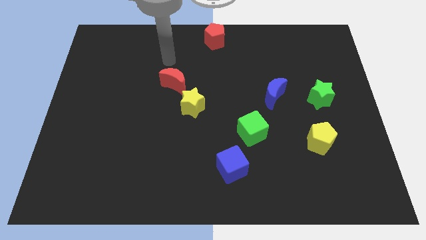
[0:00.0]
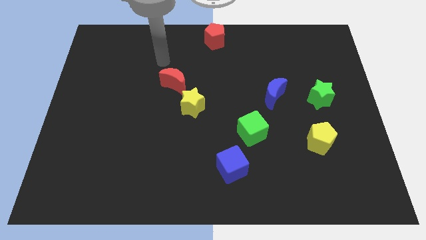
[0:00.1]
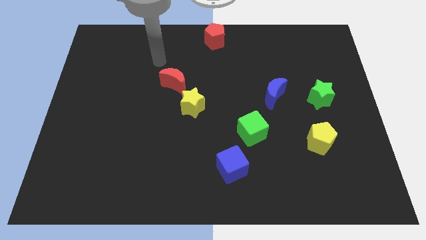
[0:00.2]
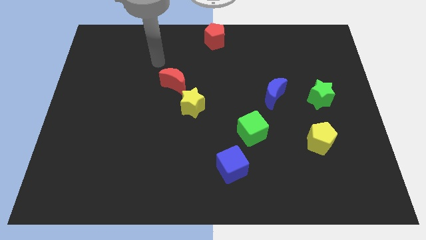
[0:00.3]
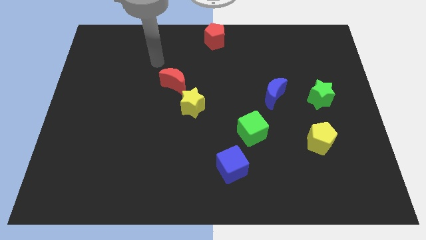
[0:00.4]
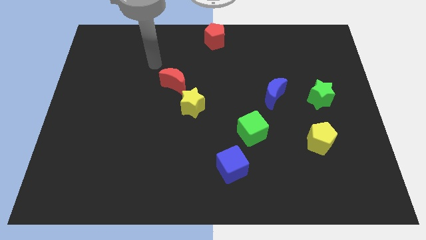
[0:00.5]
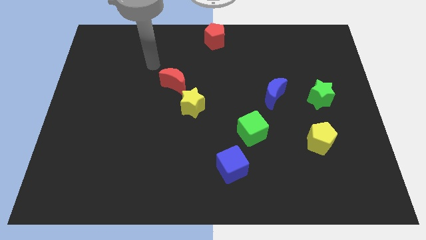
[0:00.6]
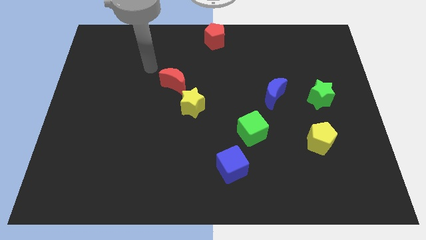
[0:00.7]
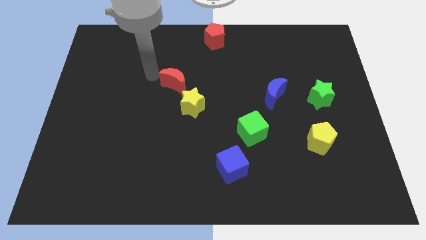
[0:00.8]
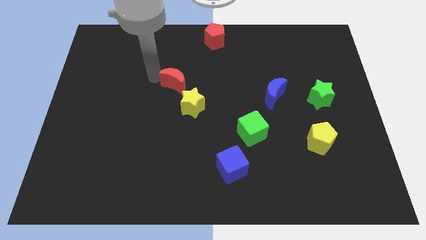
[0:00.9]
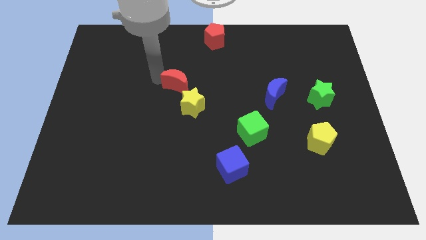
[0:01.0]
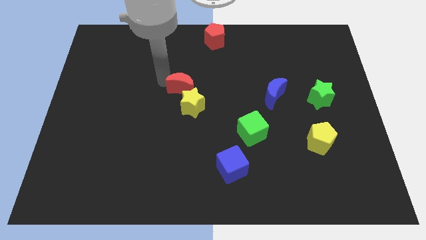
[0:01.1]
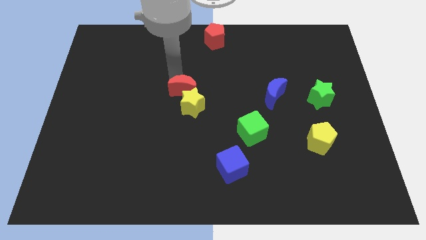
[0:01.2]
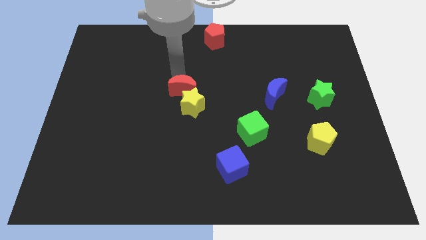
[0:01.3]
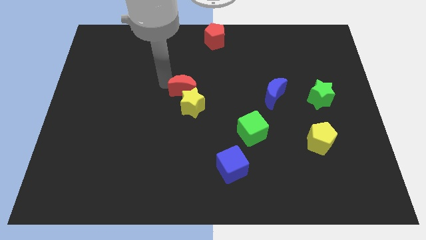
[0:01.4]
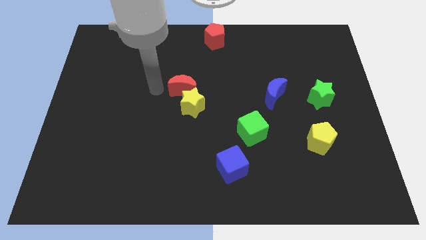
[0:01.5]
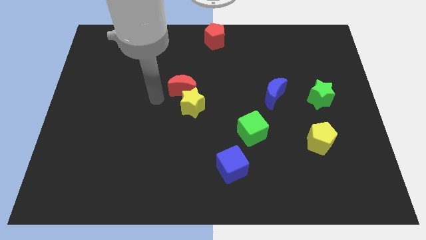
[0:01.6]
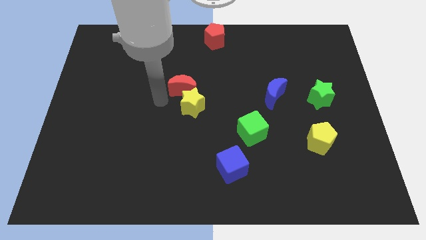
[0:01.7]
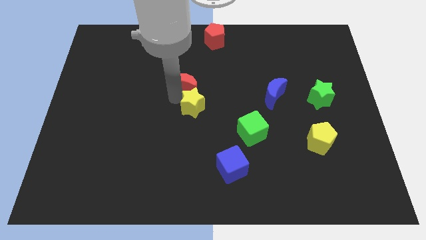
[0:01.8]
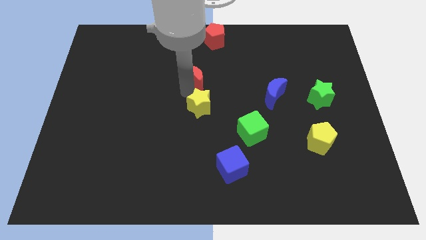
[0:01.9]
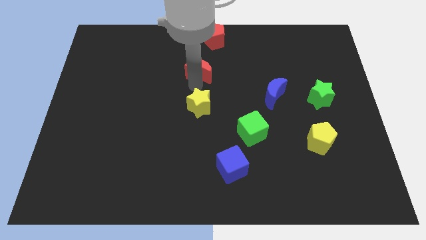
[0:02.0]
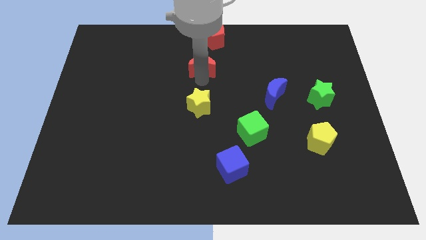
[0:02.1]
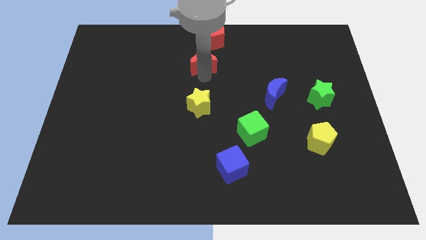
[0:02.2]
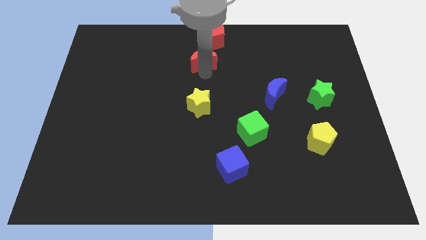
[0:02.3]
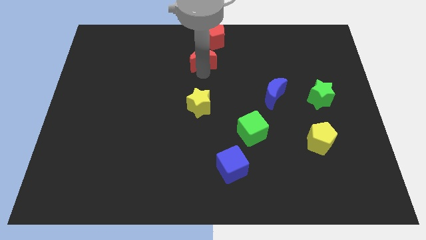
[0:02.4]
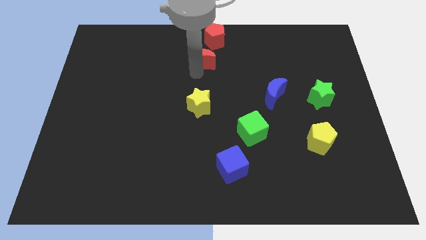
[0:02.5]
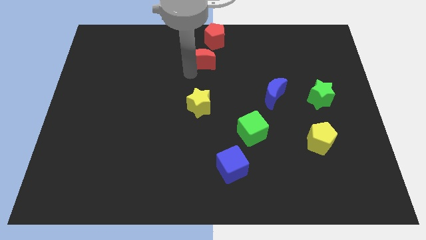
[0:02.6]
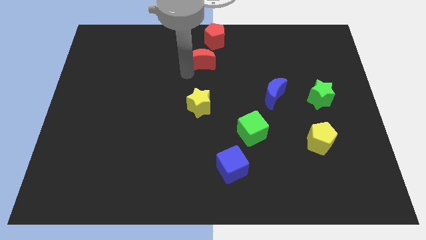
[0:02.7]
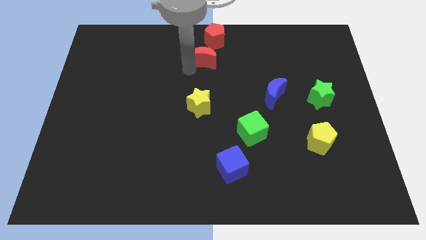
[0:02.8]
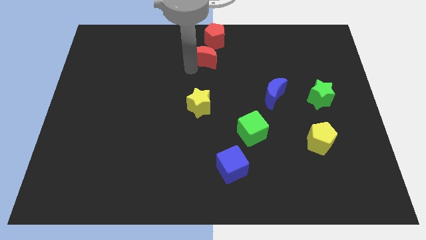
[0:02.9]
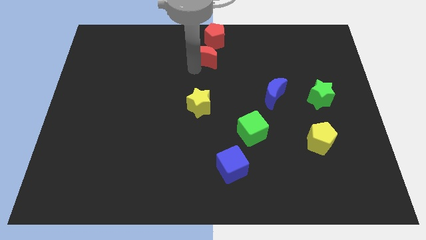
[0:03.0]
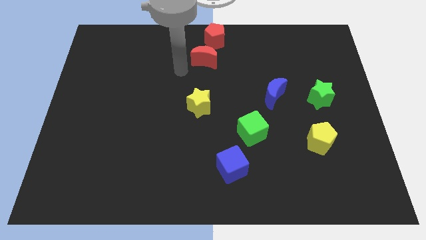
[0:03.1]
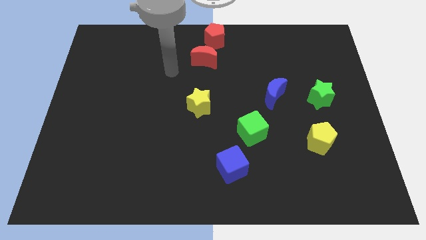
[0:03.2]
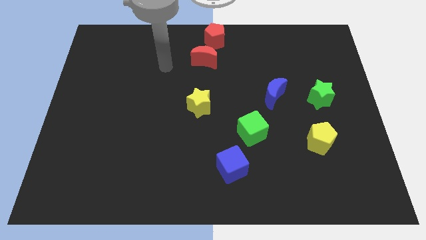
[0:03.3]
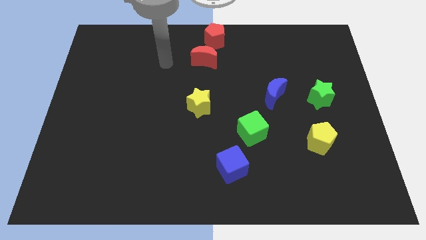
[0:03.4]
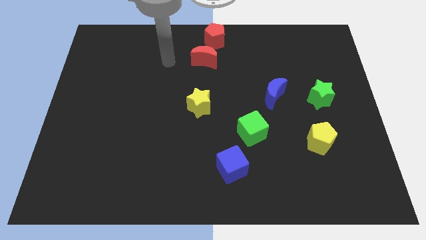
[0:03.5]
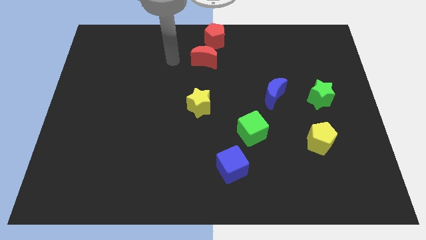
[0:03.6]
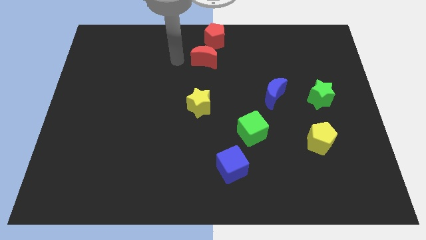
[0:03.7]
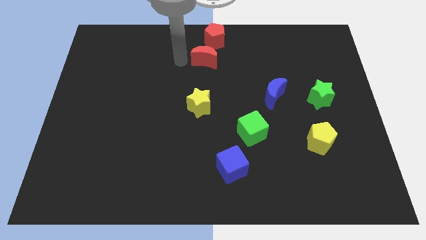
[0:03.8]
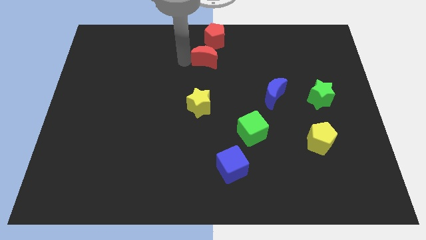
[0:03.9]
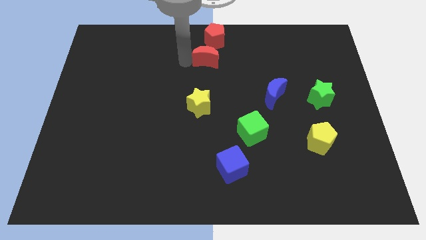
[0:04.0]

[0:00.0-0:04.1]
separate red moon from yellow star

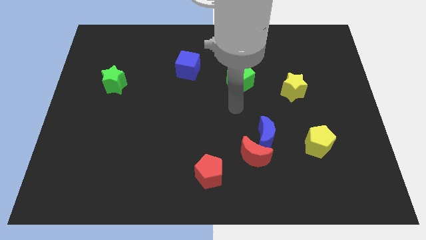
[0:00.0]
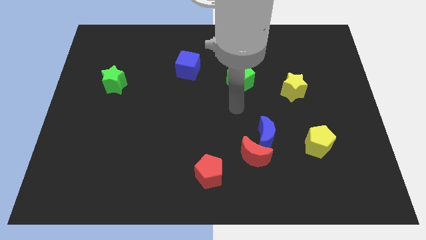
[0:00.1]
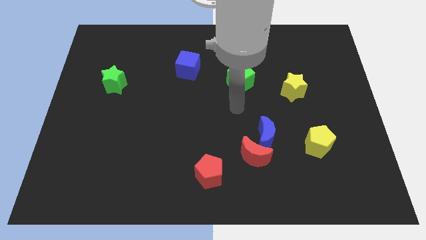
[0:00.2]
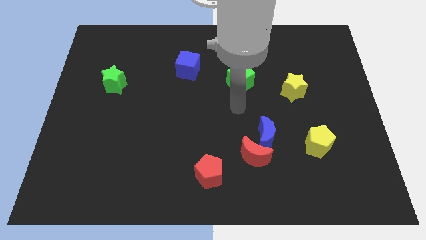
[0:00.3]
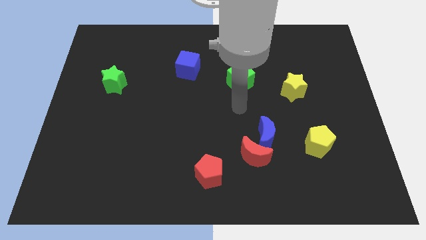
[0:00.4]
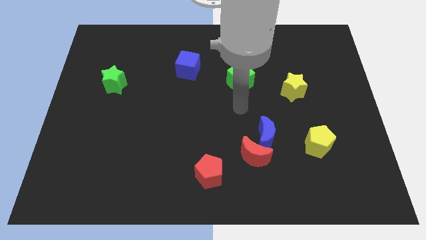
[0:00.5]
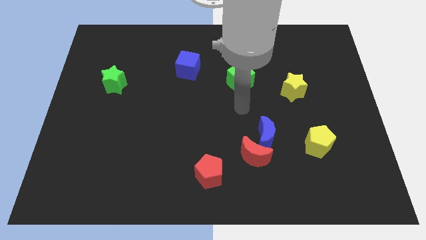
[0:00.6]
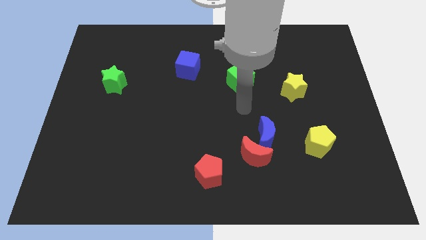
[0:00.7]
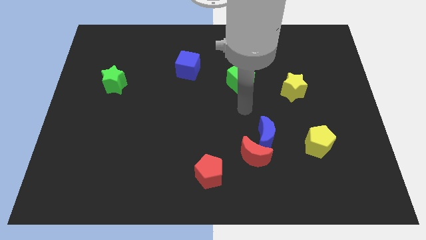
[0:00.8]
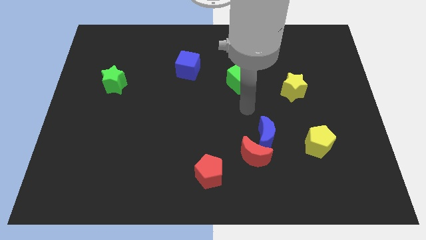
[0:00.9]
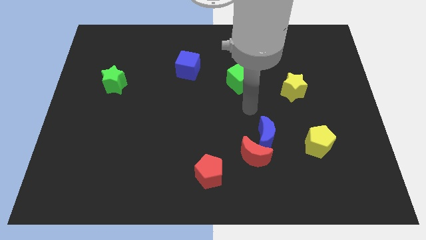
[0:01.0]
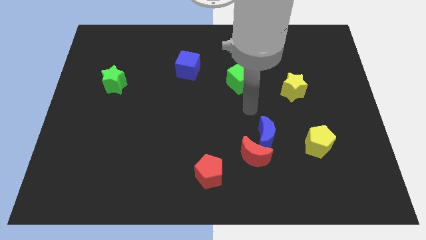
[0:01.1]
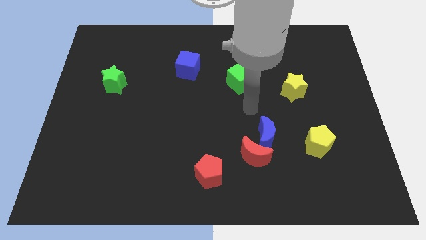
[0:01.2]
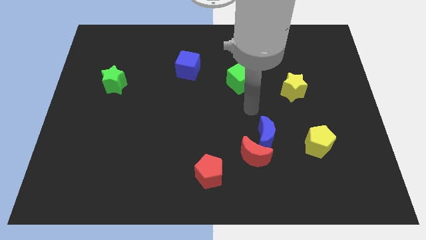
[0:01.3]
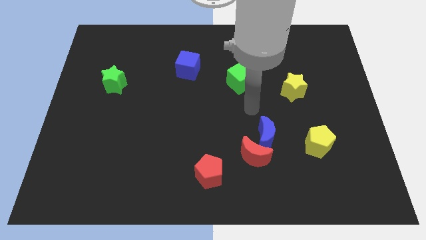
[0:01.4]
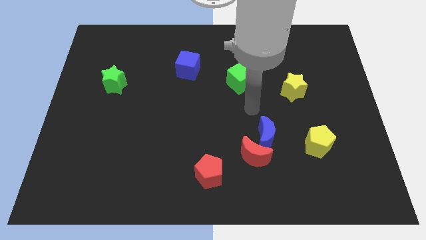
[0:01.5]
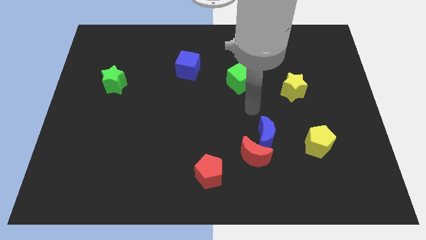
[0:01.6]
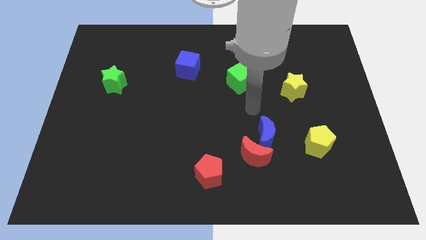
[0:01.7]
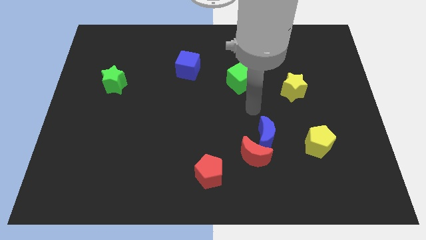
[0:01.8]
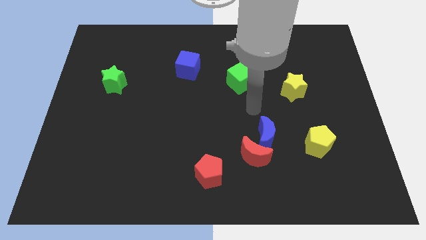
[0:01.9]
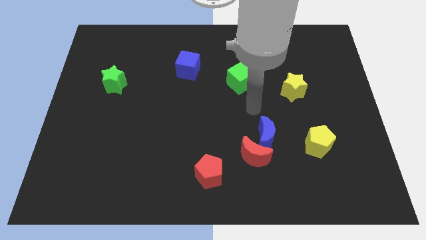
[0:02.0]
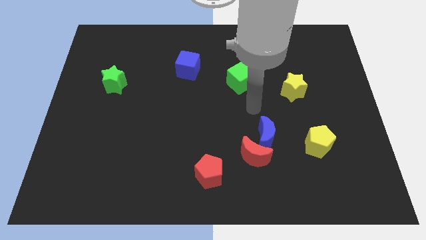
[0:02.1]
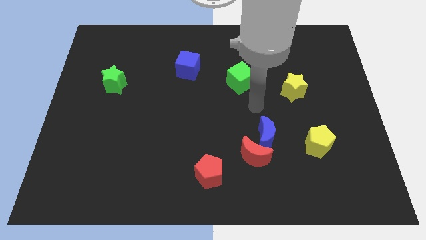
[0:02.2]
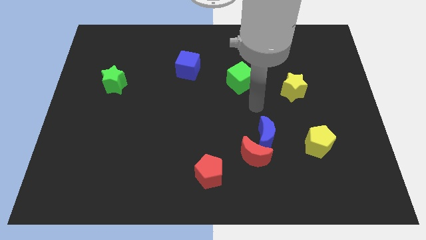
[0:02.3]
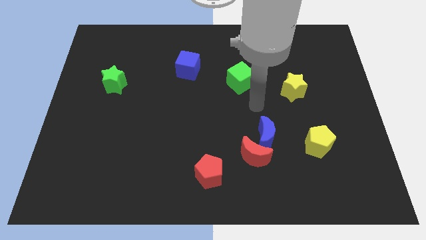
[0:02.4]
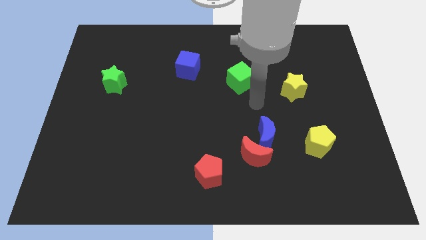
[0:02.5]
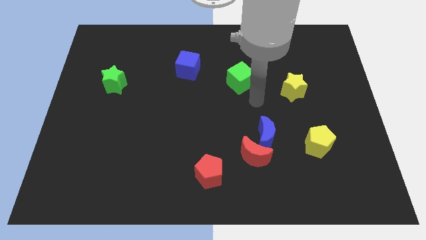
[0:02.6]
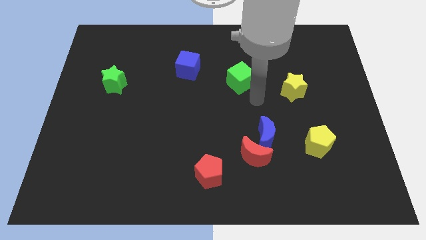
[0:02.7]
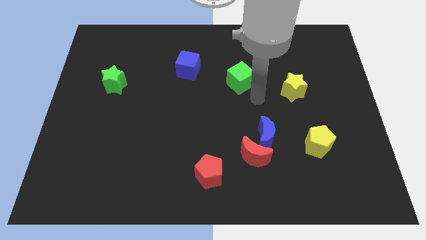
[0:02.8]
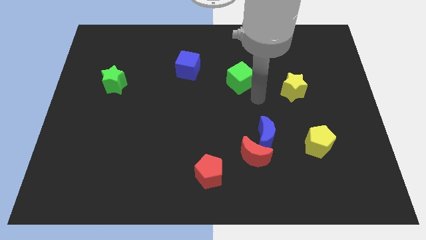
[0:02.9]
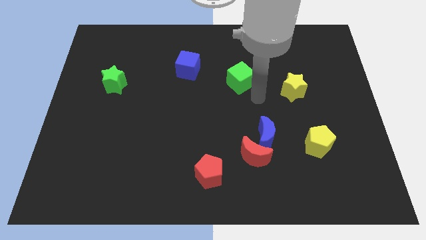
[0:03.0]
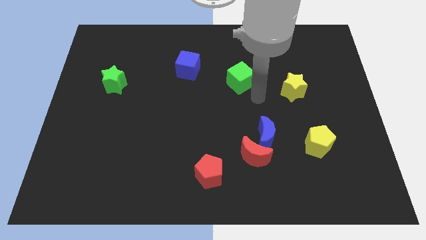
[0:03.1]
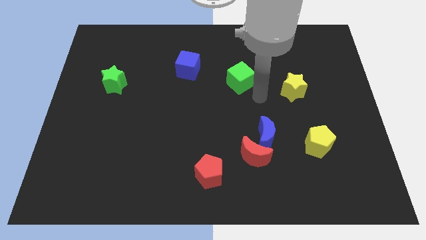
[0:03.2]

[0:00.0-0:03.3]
move your arm towards the green cube

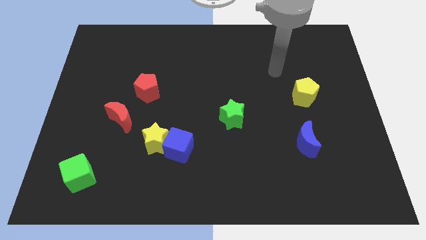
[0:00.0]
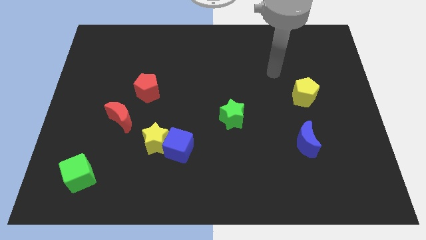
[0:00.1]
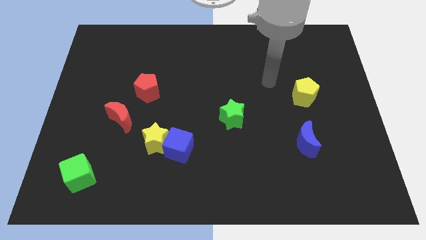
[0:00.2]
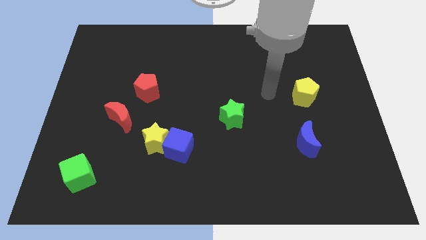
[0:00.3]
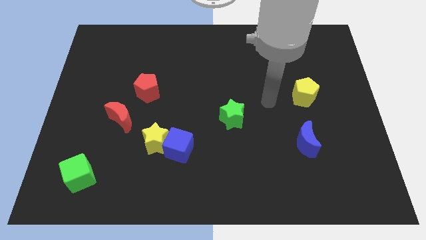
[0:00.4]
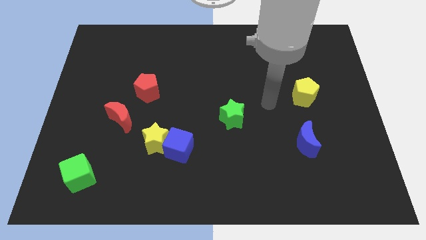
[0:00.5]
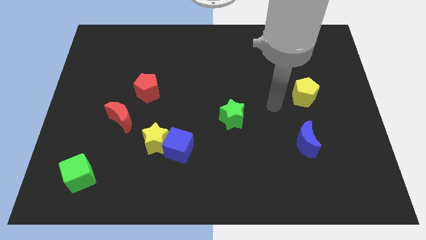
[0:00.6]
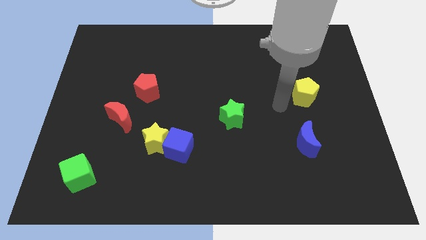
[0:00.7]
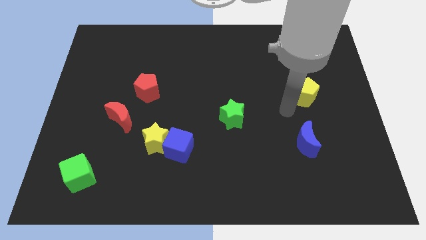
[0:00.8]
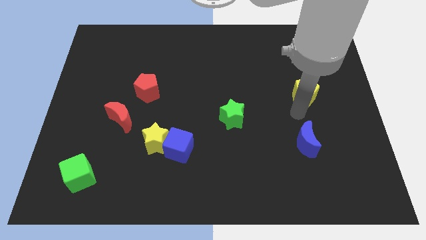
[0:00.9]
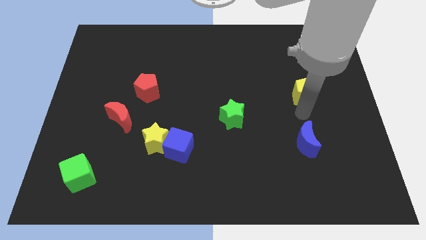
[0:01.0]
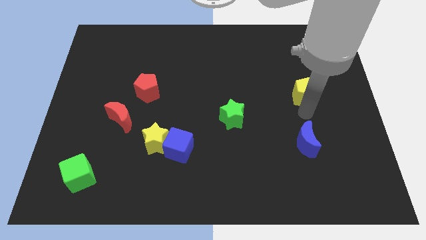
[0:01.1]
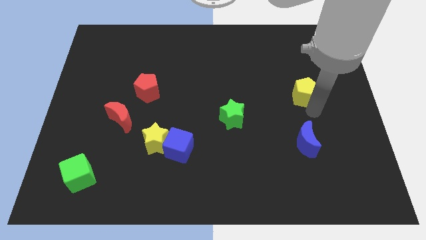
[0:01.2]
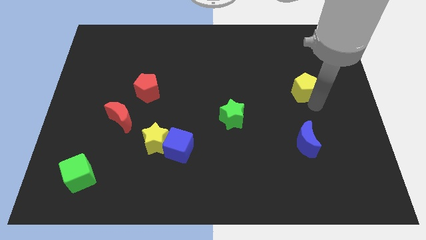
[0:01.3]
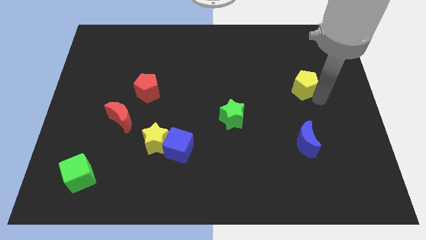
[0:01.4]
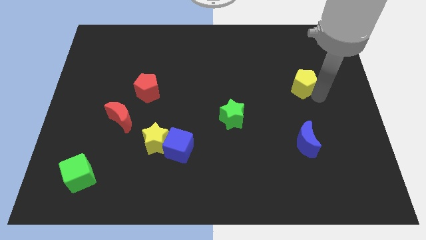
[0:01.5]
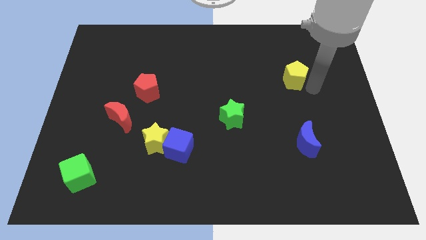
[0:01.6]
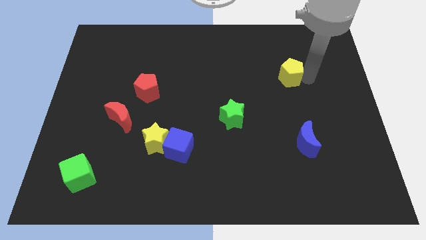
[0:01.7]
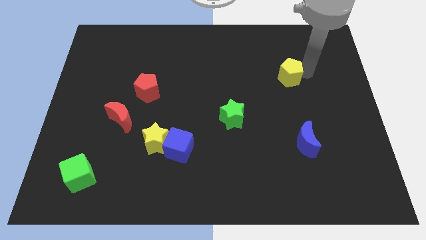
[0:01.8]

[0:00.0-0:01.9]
slightly push the yellow pentagon to left side of the board
